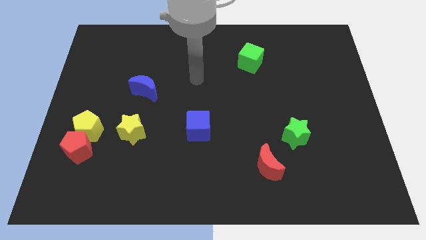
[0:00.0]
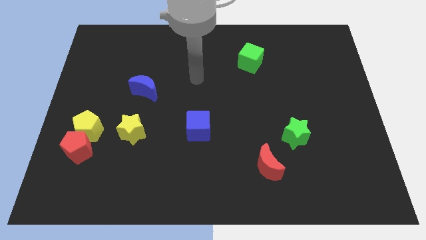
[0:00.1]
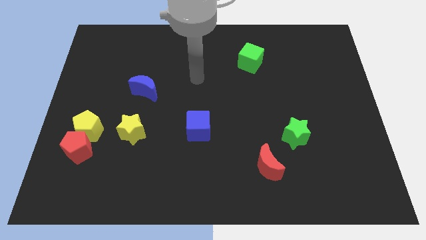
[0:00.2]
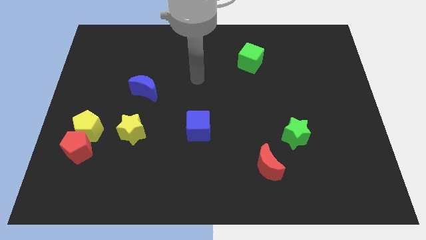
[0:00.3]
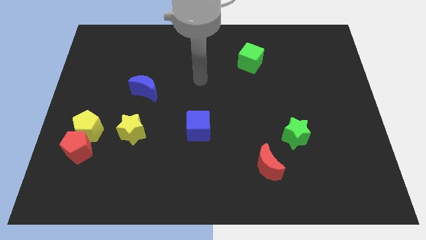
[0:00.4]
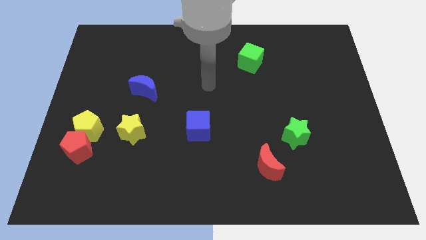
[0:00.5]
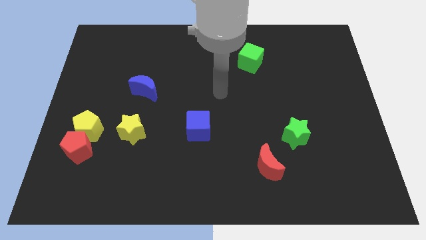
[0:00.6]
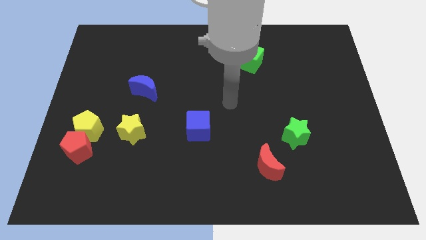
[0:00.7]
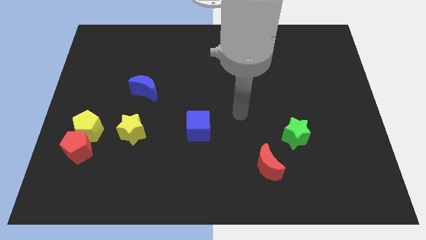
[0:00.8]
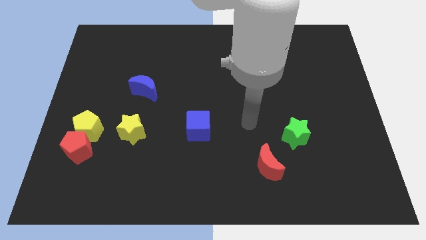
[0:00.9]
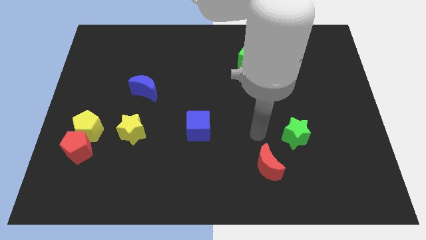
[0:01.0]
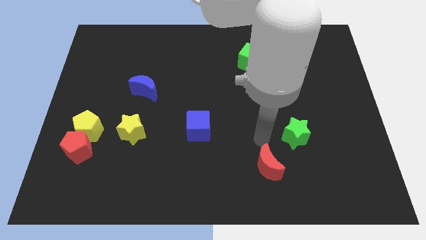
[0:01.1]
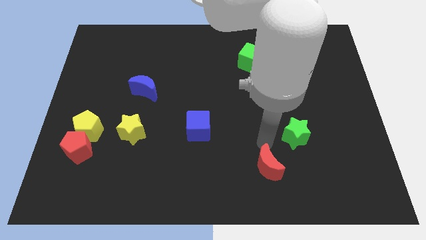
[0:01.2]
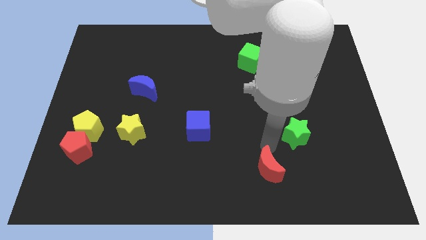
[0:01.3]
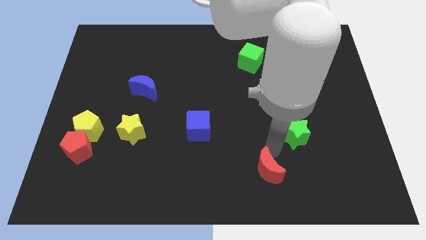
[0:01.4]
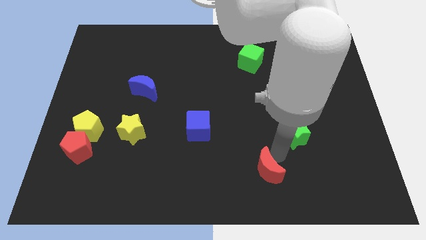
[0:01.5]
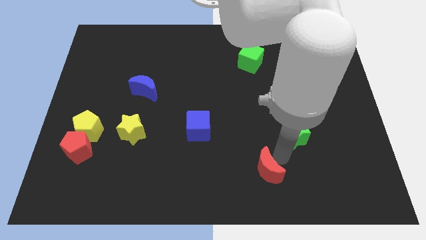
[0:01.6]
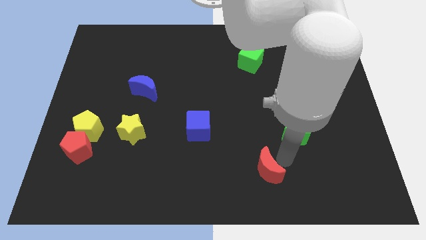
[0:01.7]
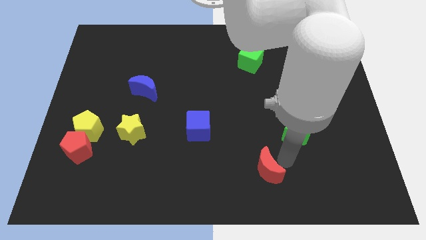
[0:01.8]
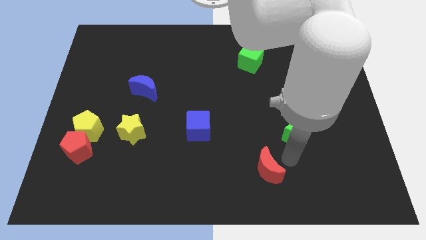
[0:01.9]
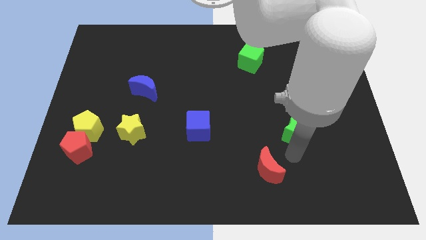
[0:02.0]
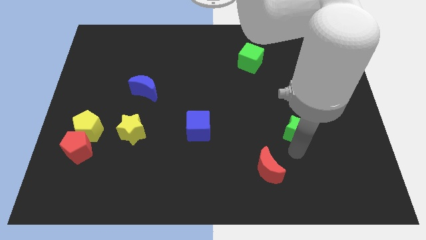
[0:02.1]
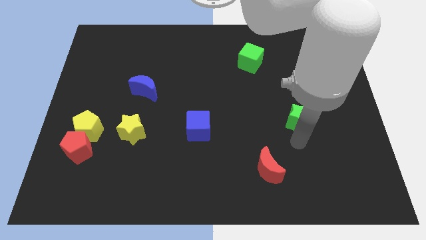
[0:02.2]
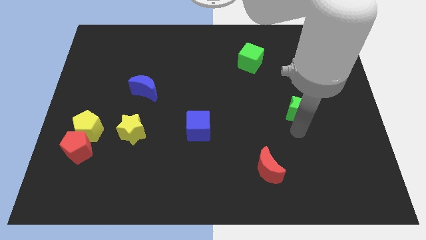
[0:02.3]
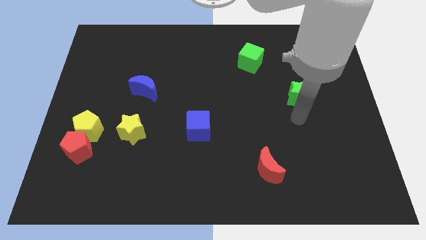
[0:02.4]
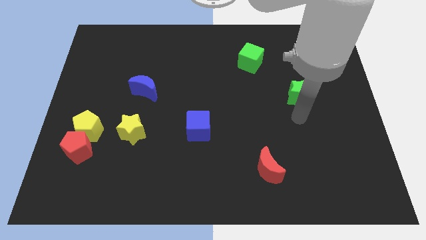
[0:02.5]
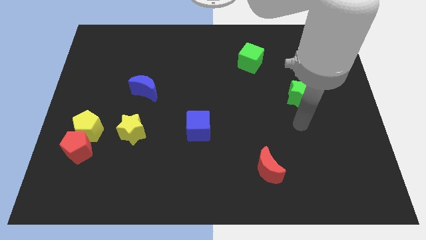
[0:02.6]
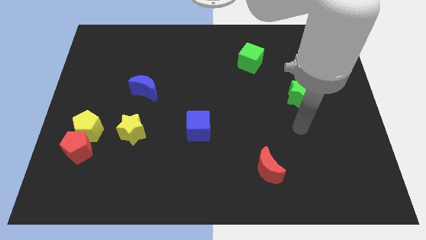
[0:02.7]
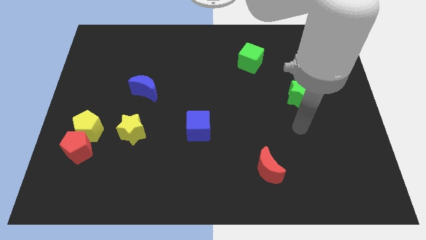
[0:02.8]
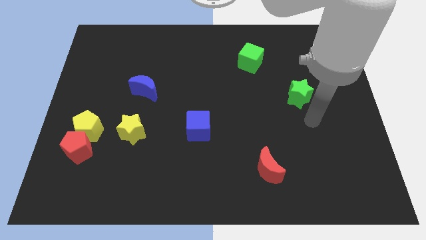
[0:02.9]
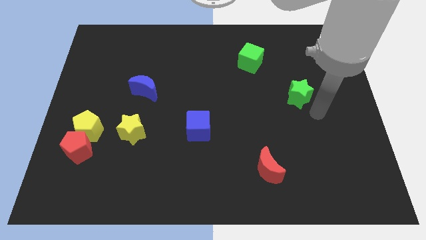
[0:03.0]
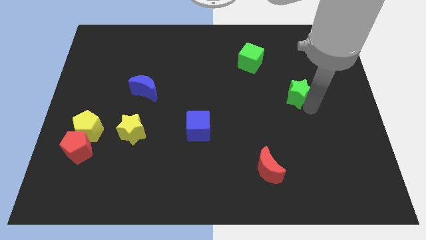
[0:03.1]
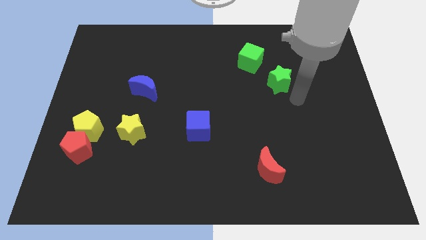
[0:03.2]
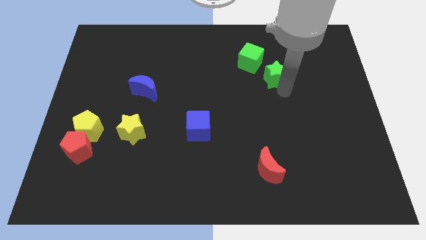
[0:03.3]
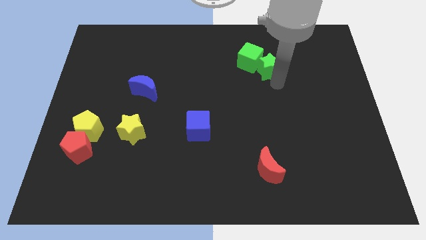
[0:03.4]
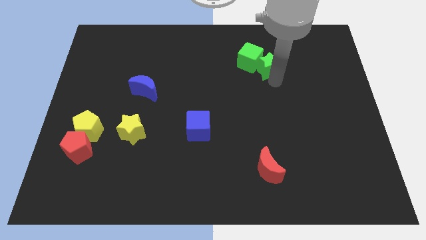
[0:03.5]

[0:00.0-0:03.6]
push the green star into the green cube

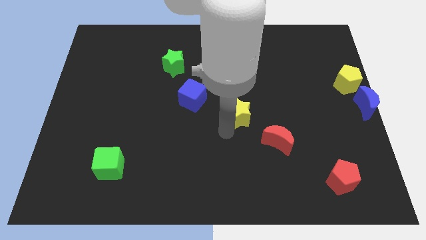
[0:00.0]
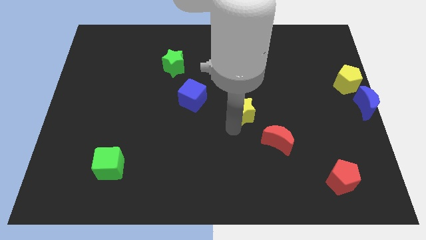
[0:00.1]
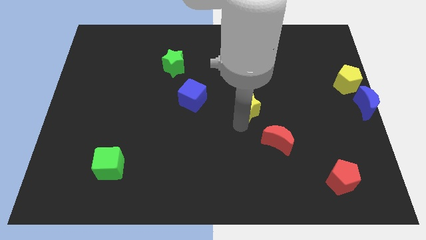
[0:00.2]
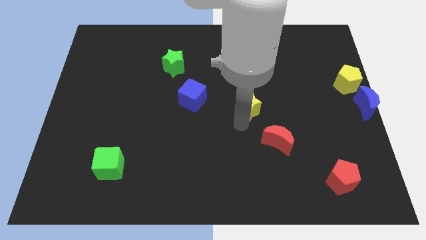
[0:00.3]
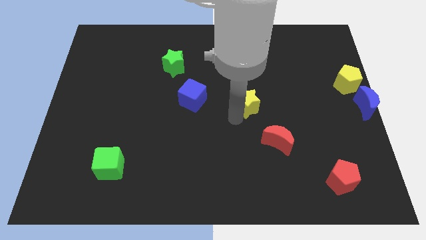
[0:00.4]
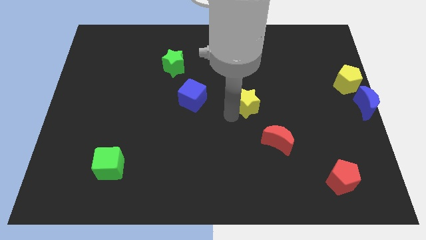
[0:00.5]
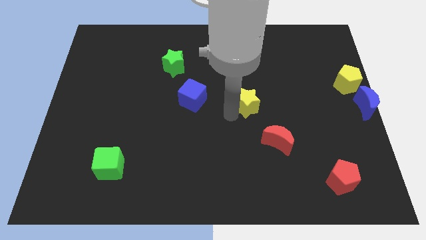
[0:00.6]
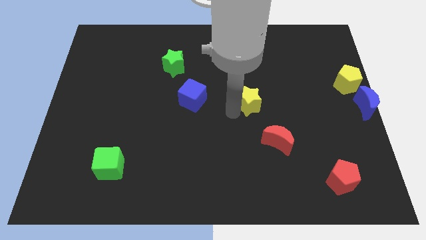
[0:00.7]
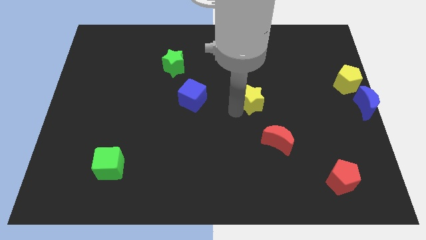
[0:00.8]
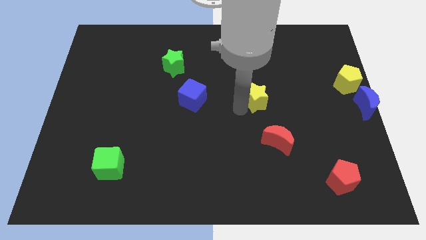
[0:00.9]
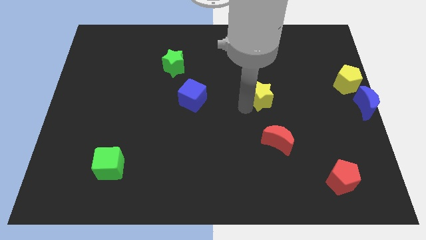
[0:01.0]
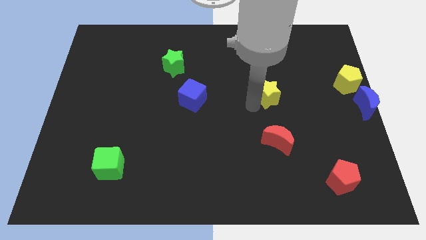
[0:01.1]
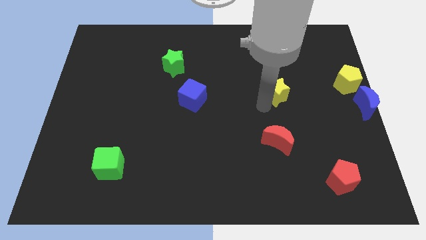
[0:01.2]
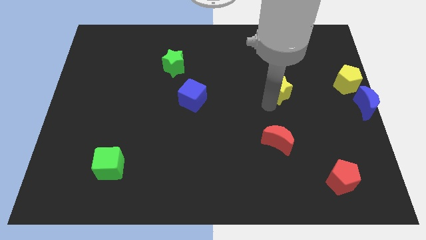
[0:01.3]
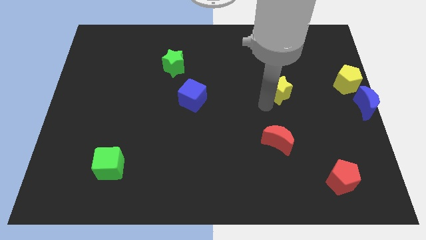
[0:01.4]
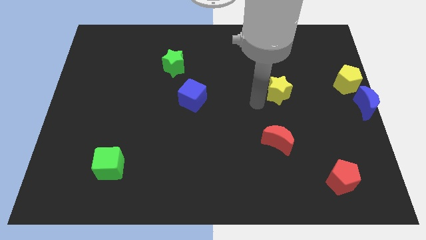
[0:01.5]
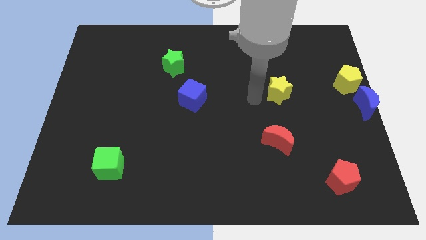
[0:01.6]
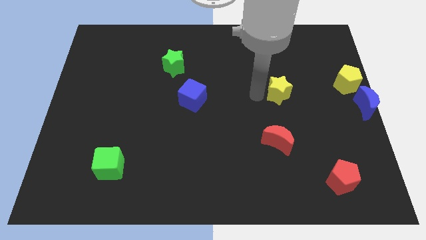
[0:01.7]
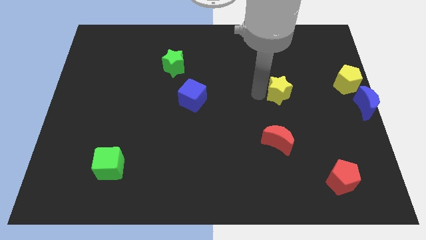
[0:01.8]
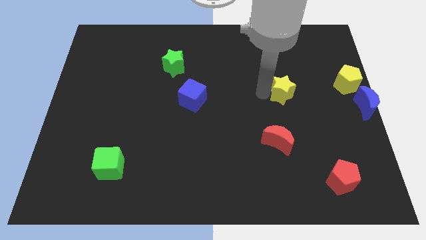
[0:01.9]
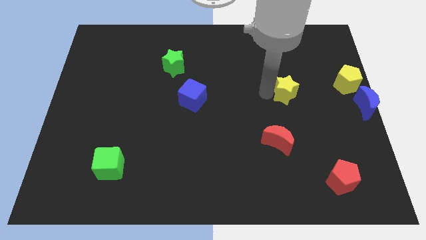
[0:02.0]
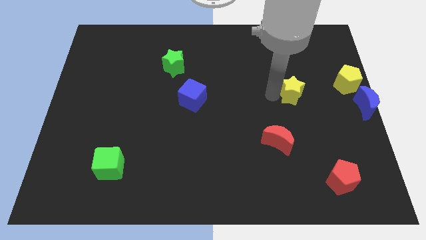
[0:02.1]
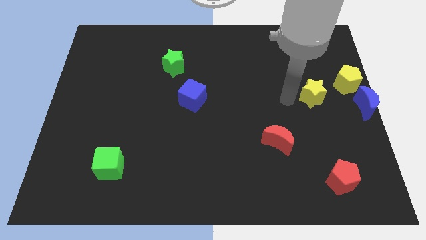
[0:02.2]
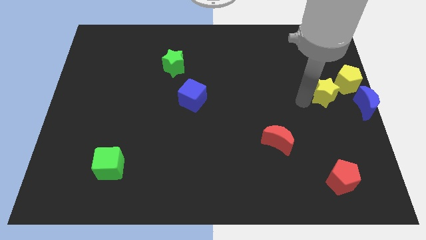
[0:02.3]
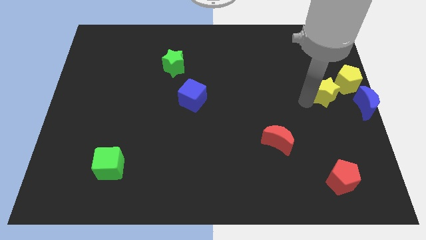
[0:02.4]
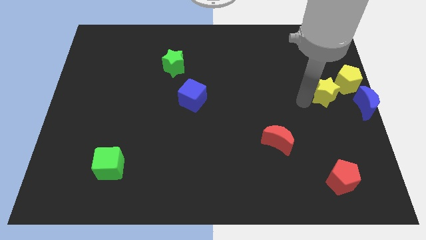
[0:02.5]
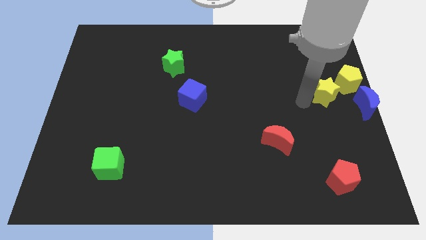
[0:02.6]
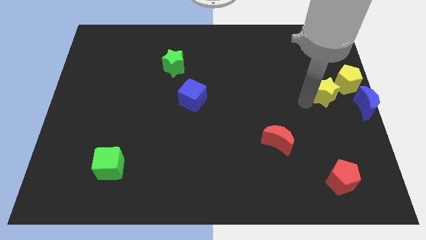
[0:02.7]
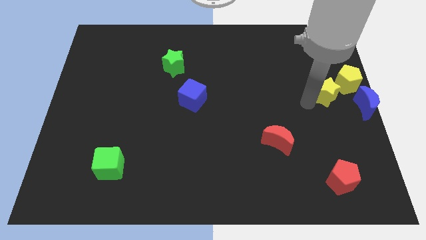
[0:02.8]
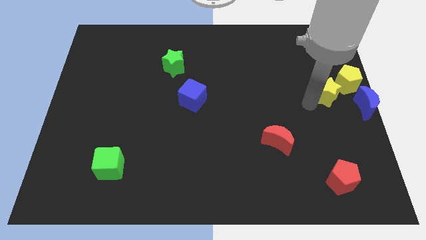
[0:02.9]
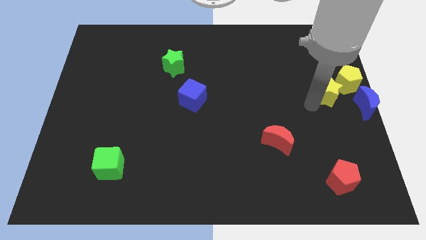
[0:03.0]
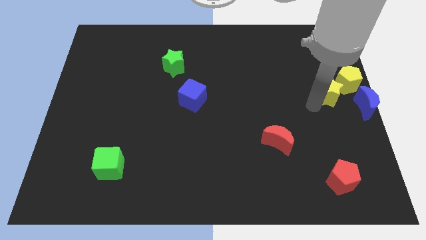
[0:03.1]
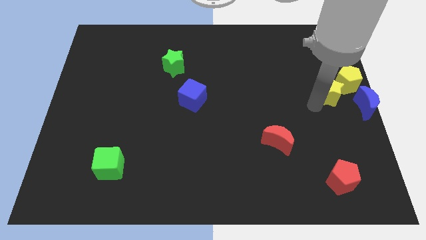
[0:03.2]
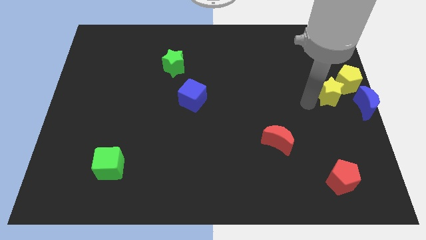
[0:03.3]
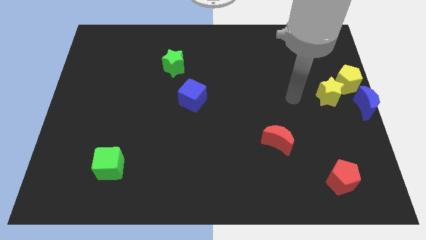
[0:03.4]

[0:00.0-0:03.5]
push the yellow star into the left of the yellow pentagon

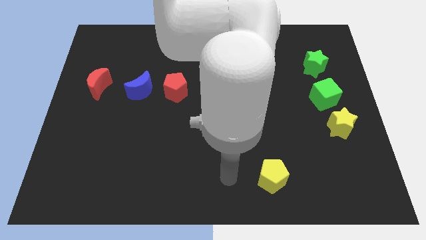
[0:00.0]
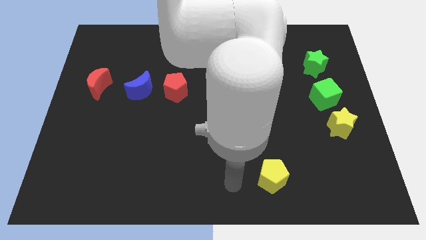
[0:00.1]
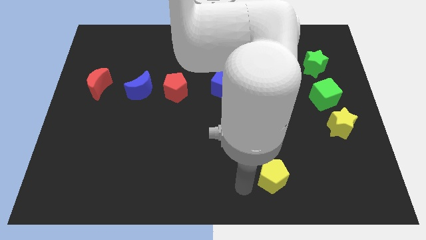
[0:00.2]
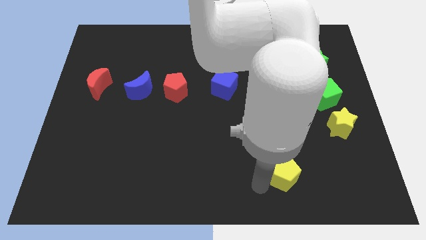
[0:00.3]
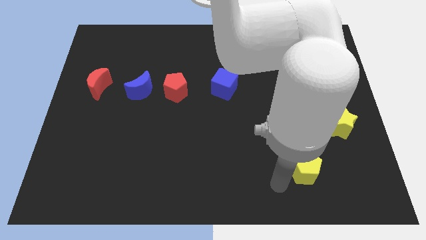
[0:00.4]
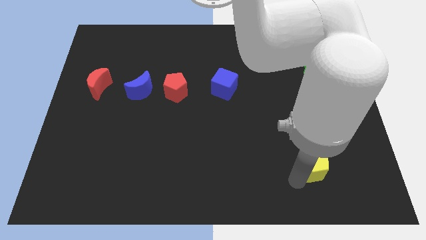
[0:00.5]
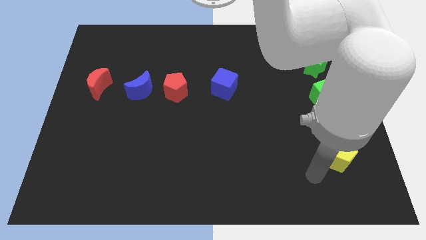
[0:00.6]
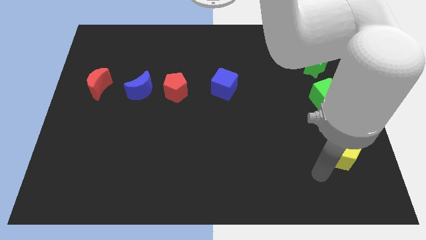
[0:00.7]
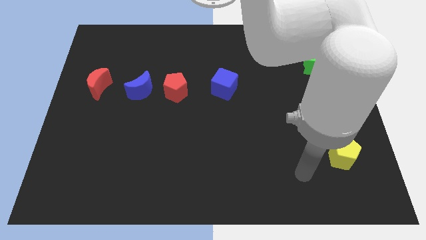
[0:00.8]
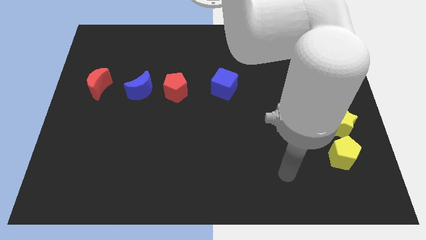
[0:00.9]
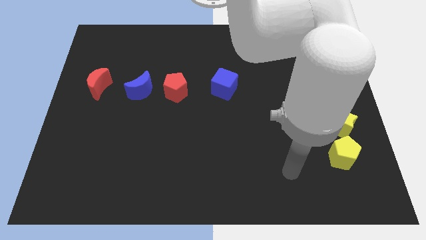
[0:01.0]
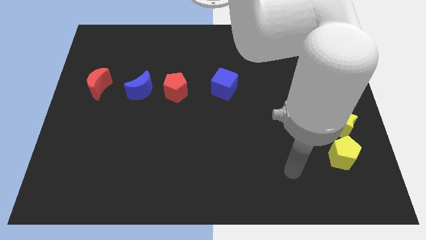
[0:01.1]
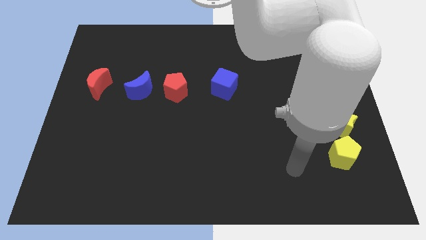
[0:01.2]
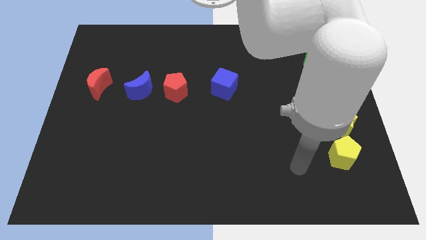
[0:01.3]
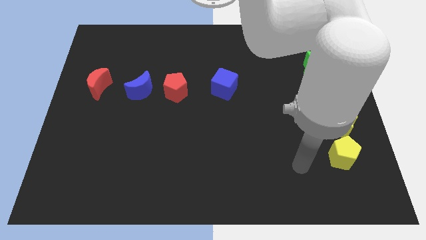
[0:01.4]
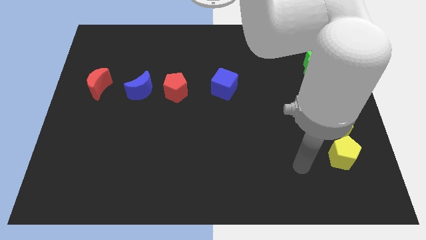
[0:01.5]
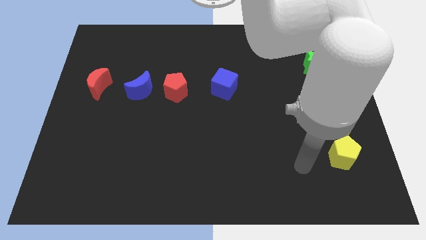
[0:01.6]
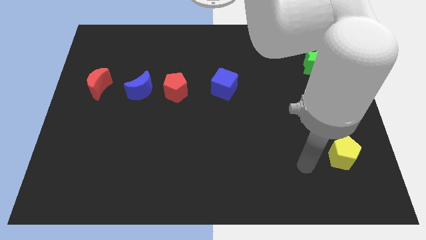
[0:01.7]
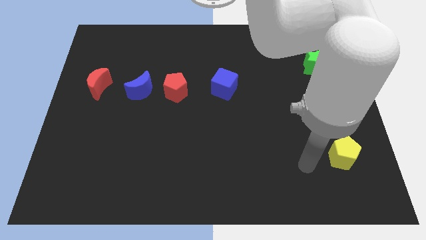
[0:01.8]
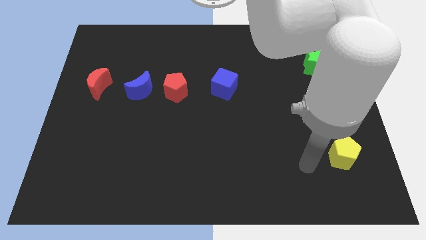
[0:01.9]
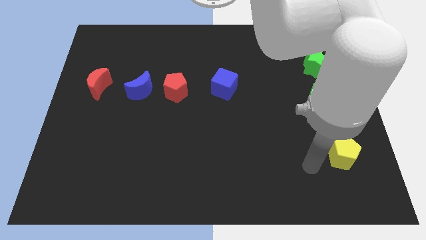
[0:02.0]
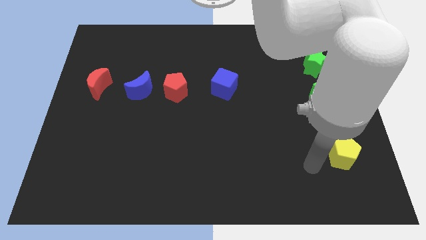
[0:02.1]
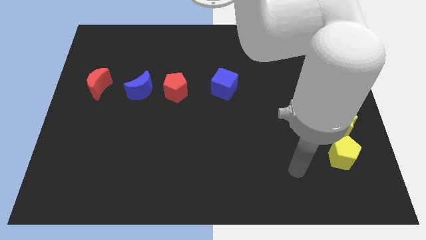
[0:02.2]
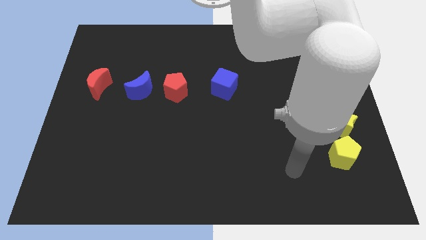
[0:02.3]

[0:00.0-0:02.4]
push yellow pentagon to the bottom of yellow star
